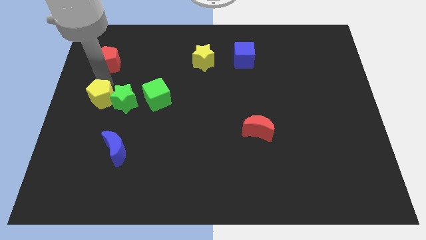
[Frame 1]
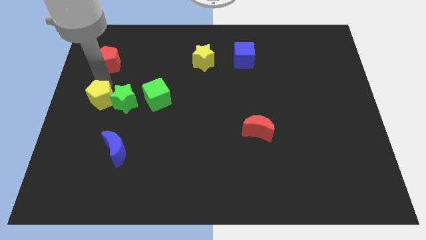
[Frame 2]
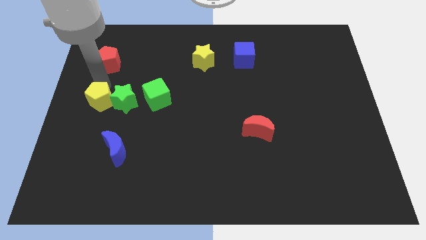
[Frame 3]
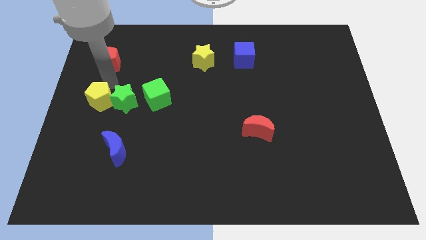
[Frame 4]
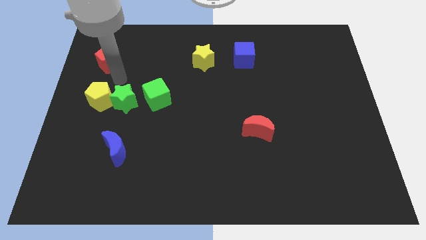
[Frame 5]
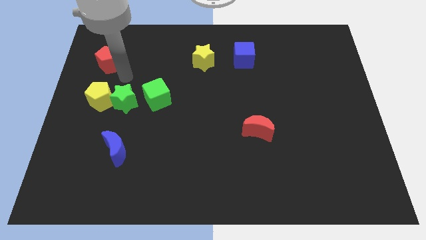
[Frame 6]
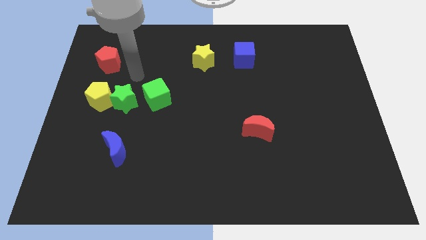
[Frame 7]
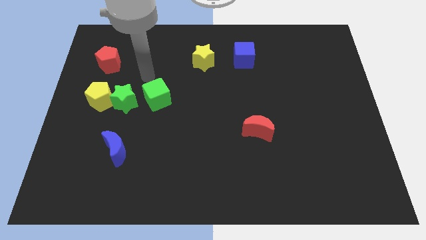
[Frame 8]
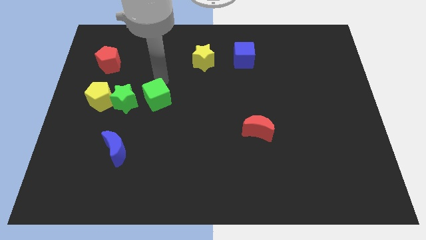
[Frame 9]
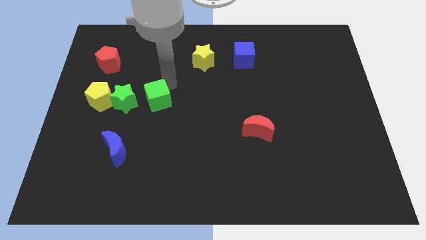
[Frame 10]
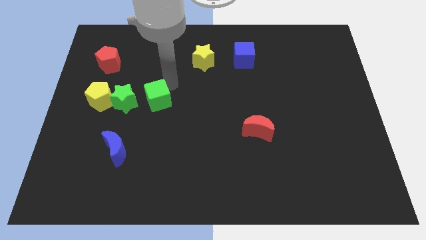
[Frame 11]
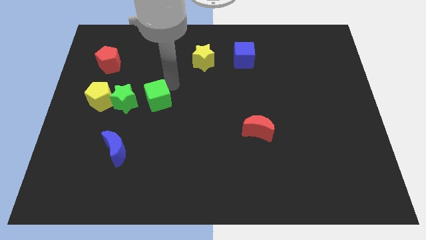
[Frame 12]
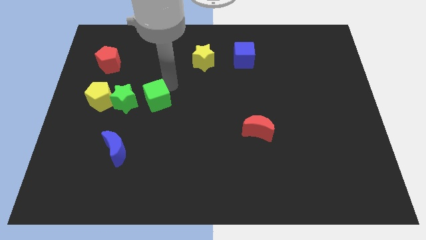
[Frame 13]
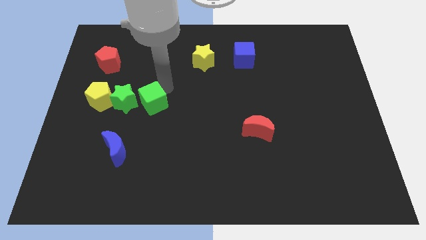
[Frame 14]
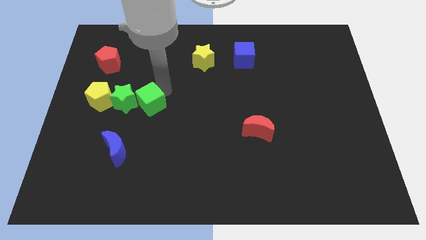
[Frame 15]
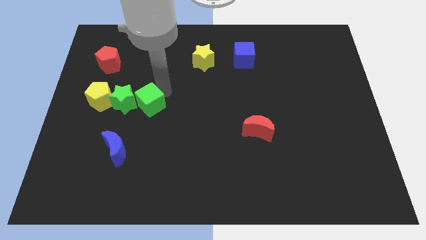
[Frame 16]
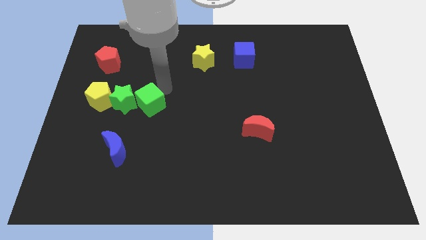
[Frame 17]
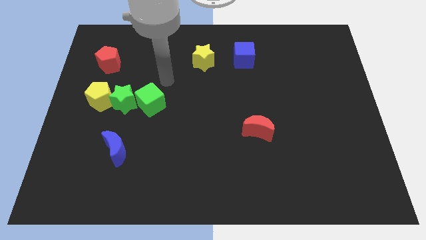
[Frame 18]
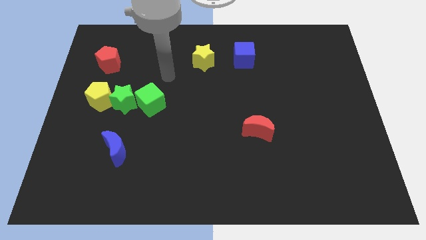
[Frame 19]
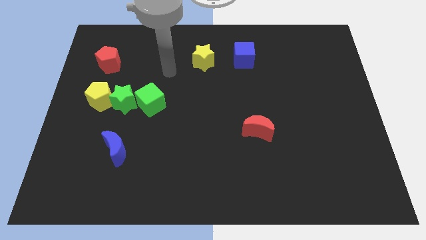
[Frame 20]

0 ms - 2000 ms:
arrange blocks in a row

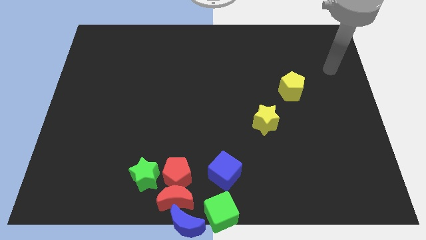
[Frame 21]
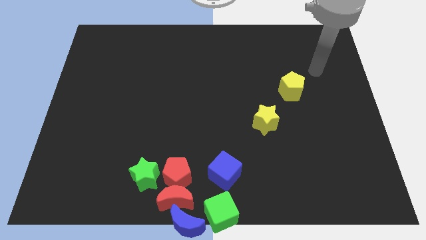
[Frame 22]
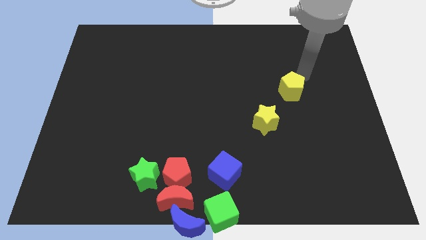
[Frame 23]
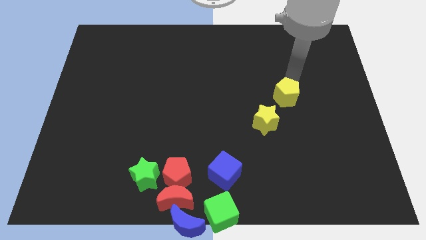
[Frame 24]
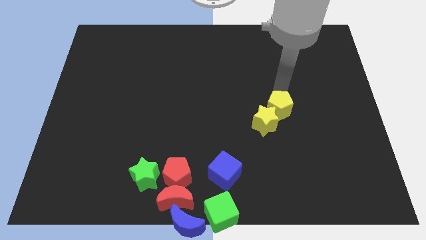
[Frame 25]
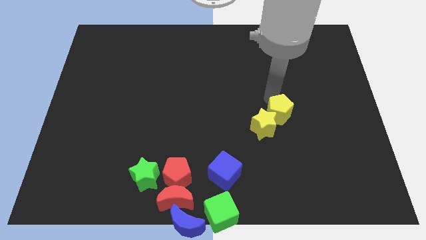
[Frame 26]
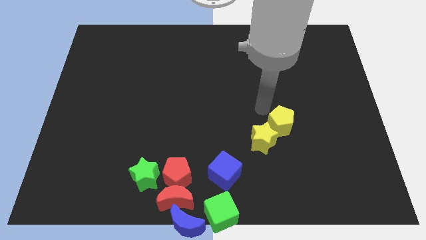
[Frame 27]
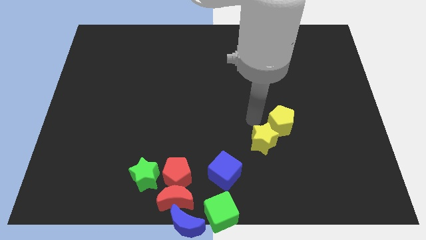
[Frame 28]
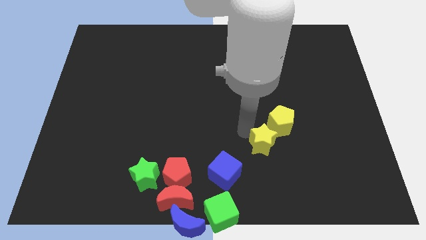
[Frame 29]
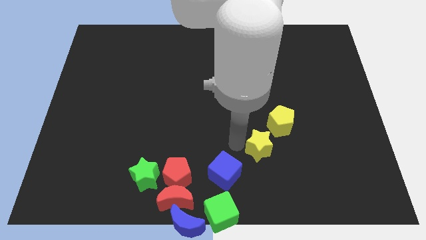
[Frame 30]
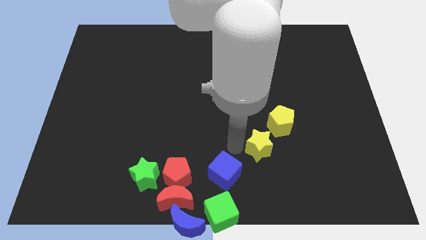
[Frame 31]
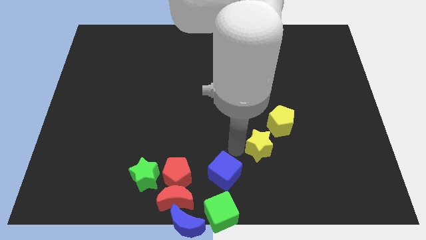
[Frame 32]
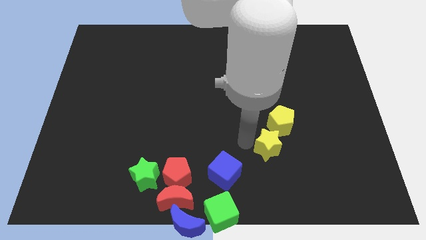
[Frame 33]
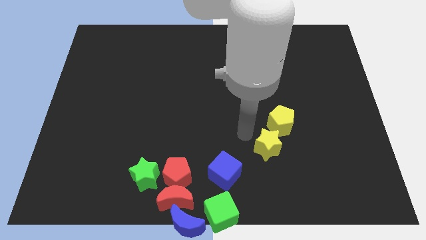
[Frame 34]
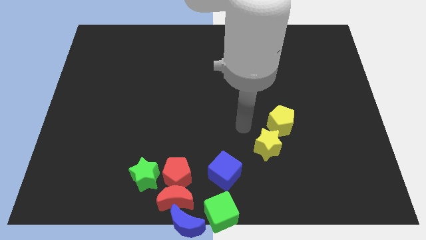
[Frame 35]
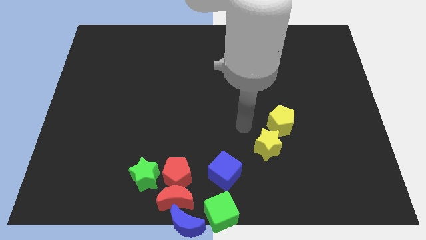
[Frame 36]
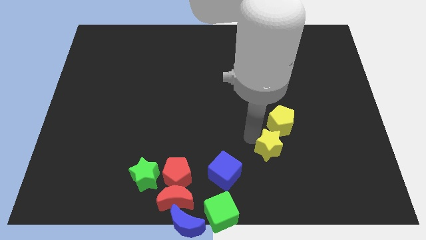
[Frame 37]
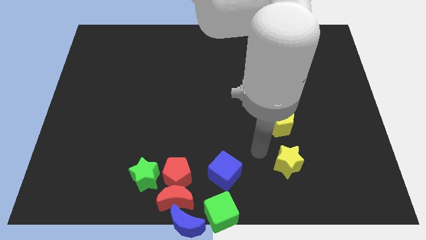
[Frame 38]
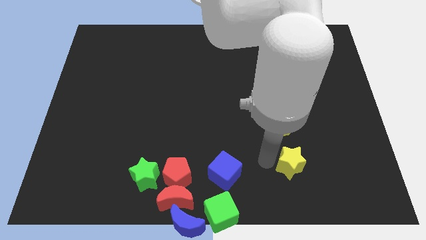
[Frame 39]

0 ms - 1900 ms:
slightly move the yellow pentagon and yellow star towards bottom

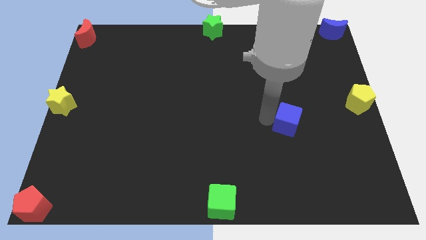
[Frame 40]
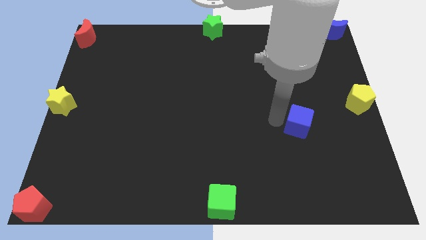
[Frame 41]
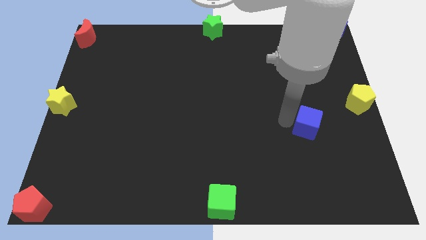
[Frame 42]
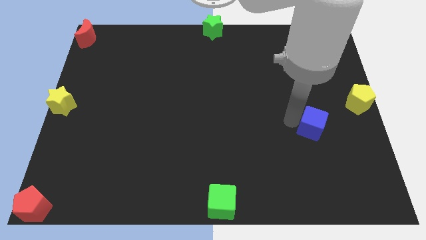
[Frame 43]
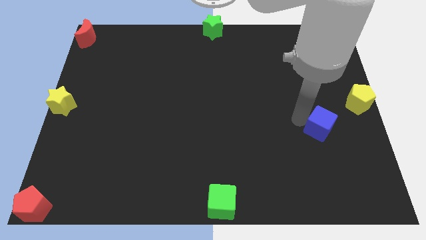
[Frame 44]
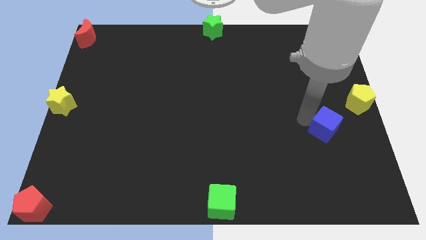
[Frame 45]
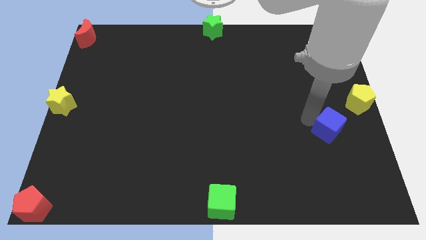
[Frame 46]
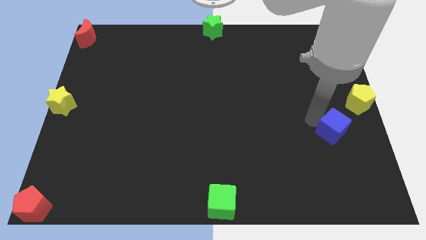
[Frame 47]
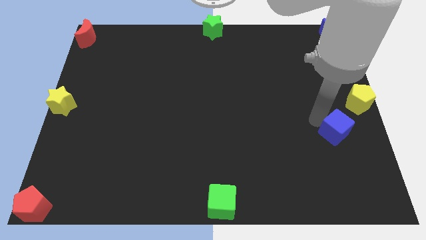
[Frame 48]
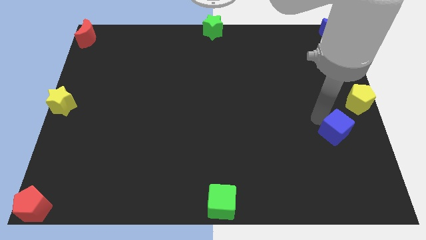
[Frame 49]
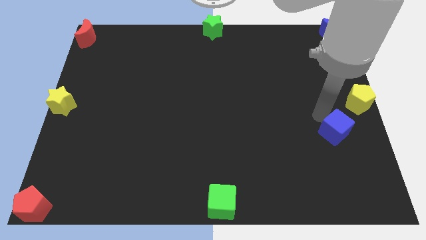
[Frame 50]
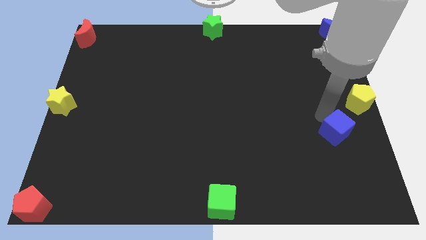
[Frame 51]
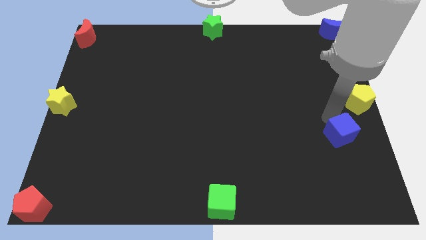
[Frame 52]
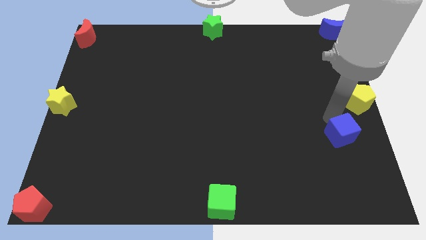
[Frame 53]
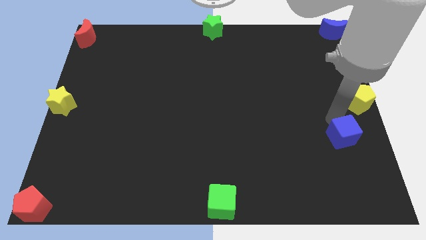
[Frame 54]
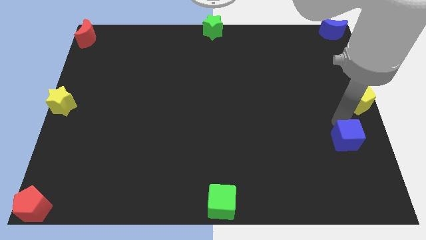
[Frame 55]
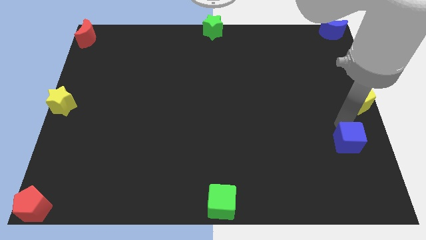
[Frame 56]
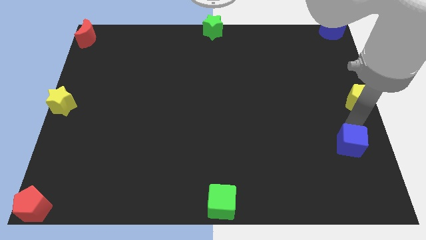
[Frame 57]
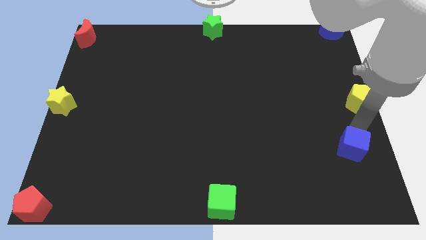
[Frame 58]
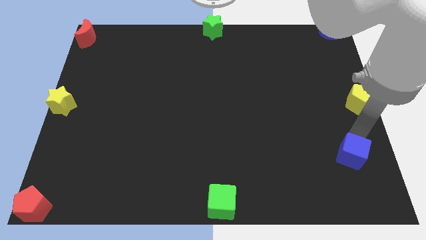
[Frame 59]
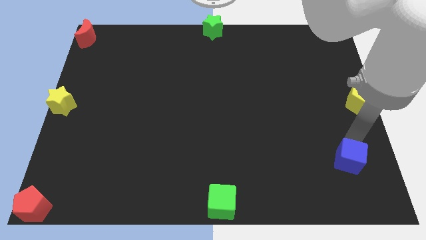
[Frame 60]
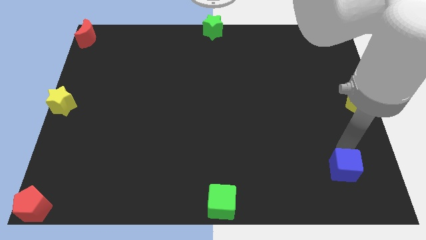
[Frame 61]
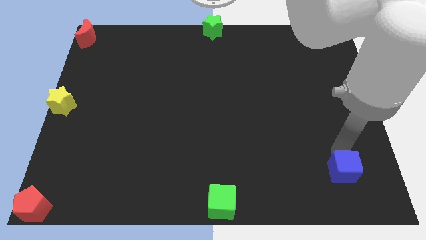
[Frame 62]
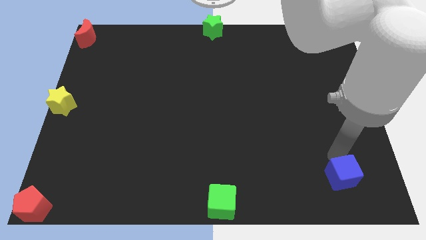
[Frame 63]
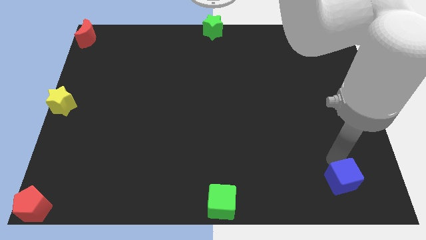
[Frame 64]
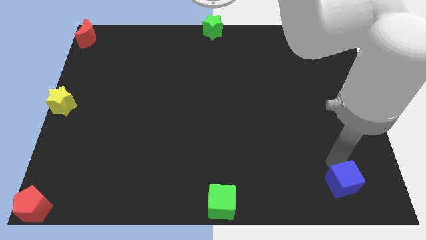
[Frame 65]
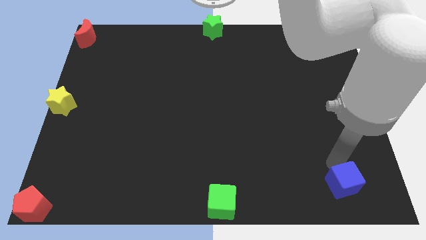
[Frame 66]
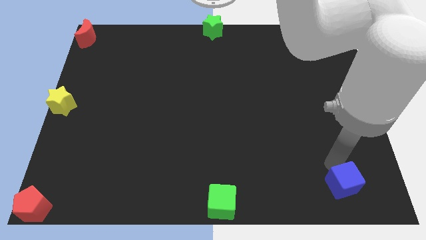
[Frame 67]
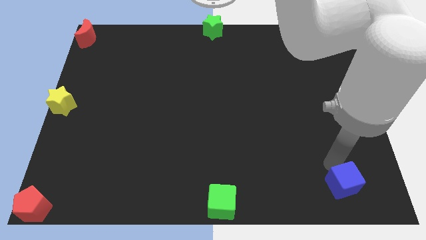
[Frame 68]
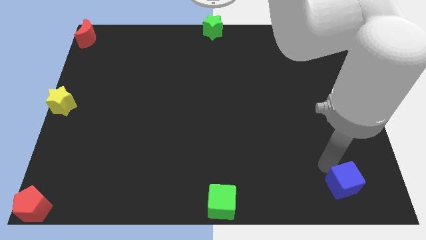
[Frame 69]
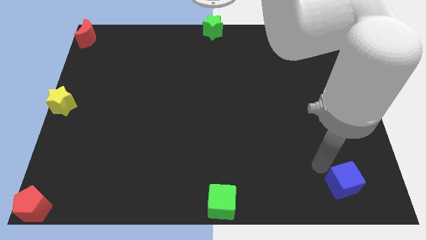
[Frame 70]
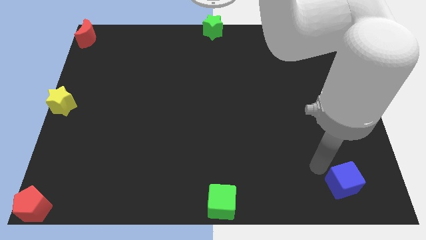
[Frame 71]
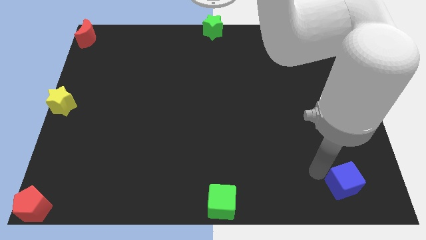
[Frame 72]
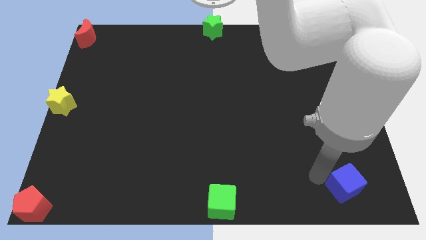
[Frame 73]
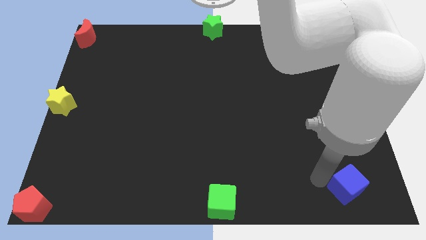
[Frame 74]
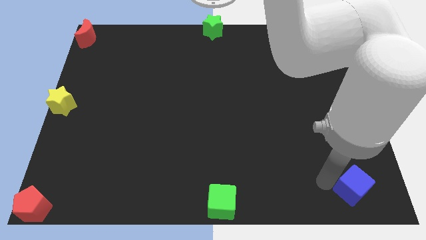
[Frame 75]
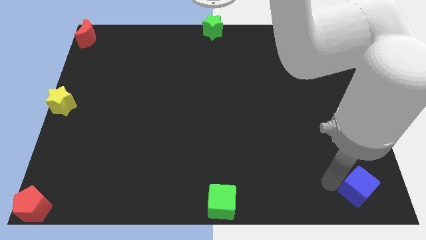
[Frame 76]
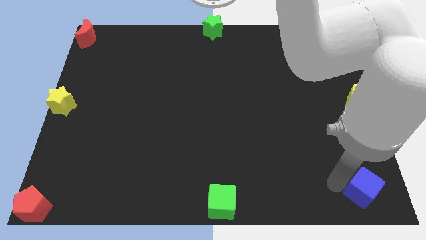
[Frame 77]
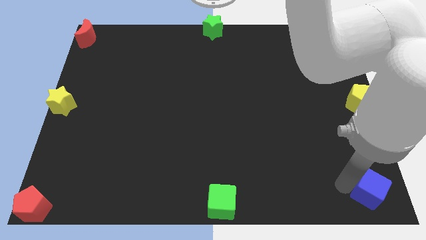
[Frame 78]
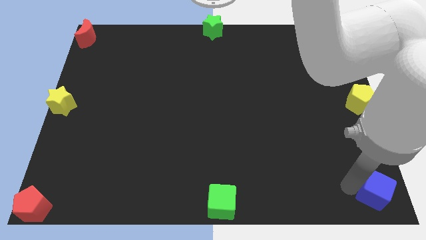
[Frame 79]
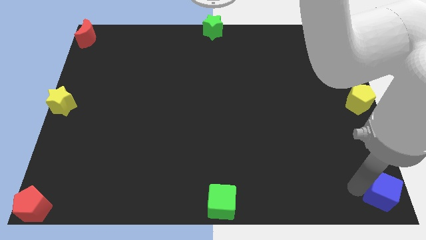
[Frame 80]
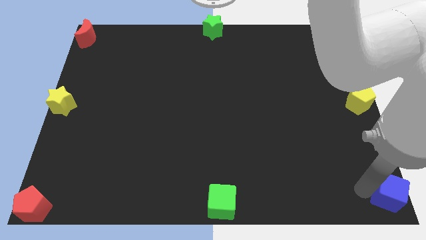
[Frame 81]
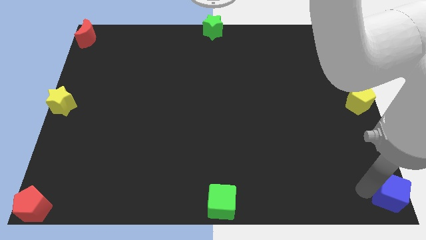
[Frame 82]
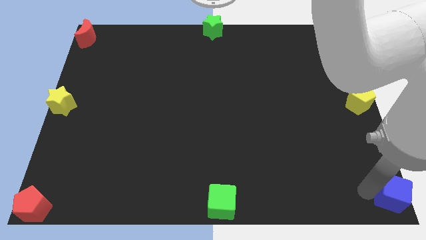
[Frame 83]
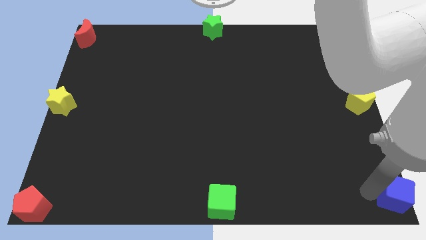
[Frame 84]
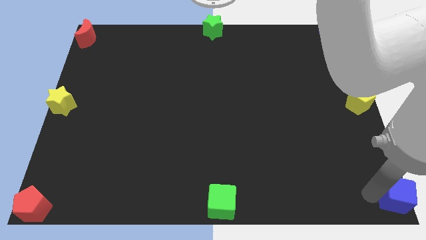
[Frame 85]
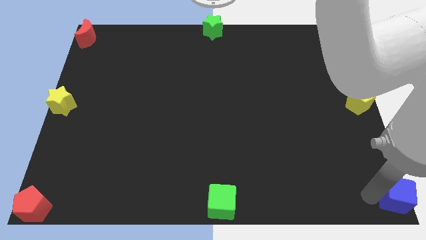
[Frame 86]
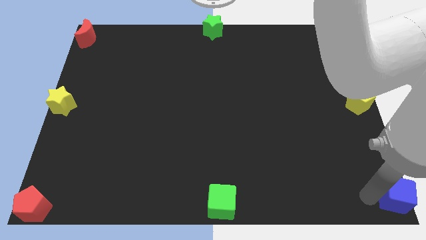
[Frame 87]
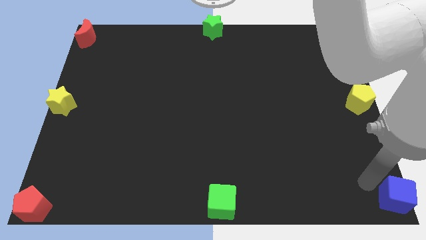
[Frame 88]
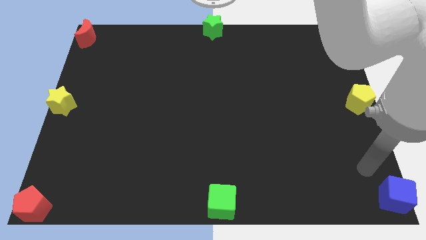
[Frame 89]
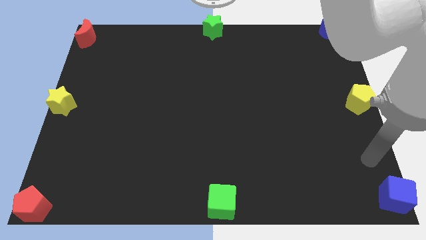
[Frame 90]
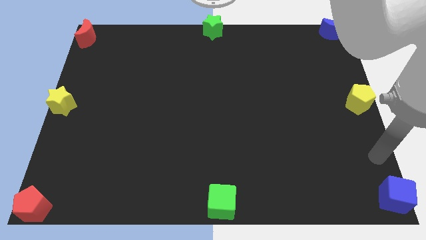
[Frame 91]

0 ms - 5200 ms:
place blue cube to the bottom right corner of the board
